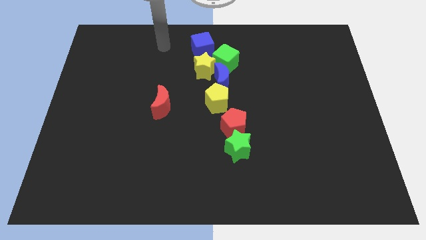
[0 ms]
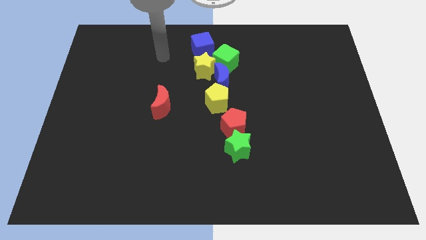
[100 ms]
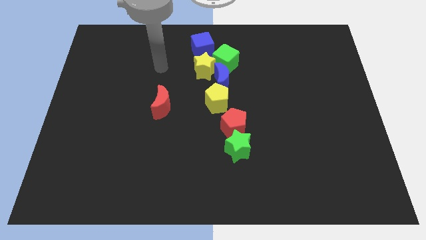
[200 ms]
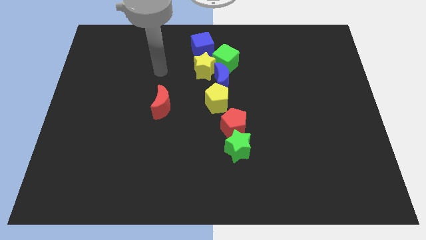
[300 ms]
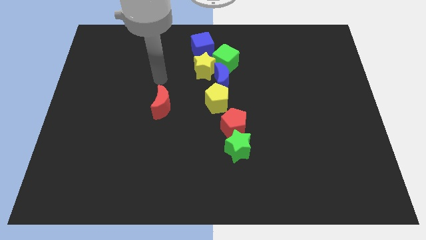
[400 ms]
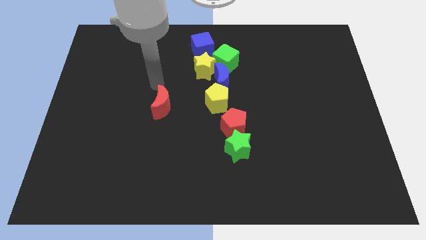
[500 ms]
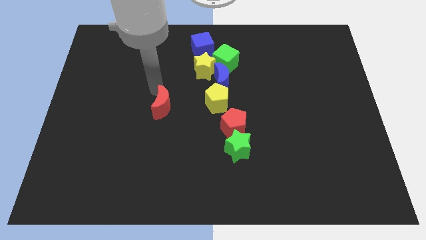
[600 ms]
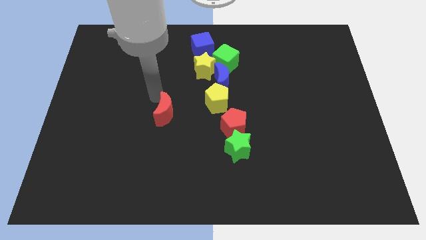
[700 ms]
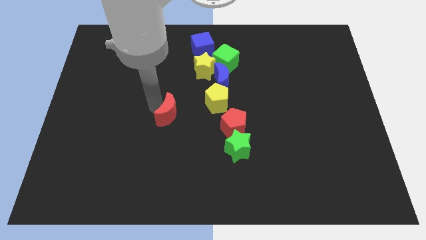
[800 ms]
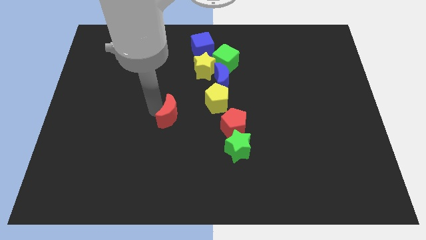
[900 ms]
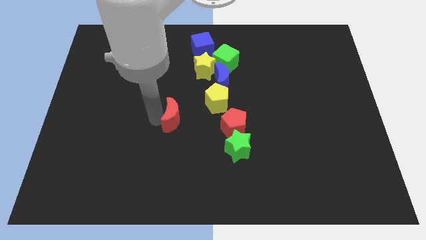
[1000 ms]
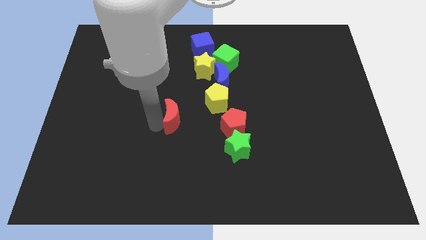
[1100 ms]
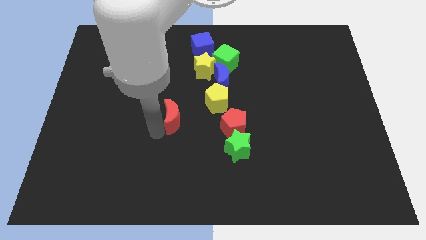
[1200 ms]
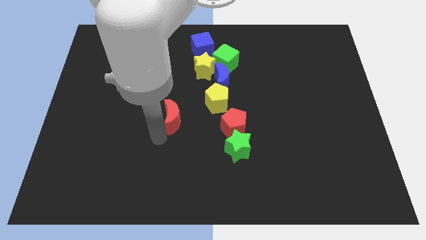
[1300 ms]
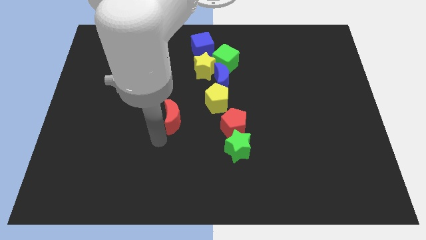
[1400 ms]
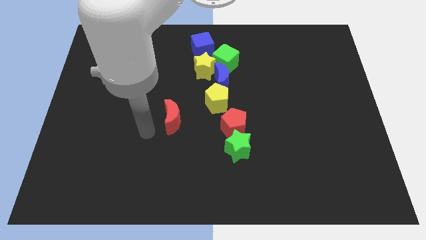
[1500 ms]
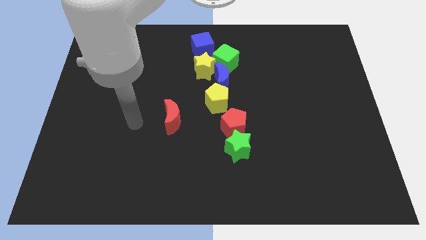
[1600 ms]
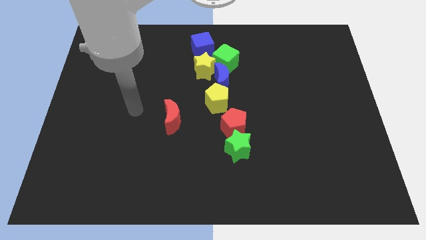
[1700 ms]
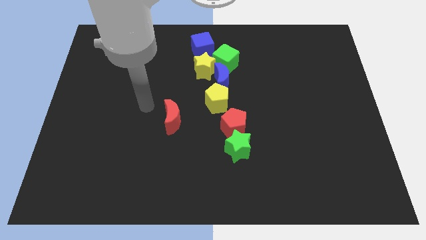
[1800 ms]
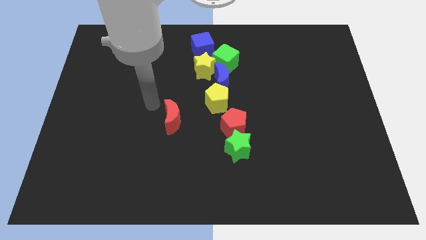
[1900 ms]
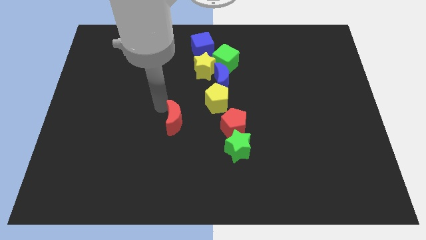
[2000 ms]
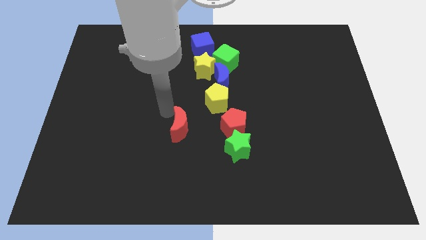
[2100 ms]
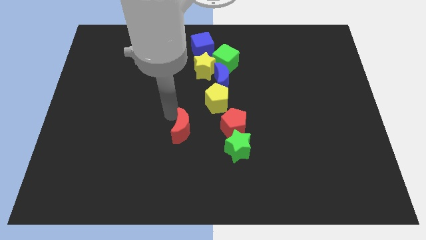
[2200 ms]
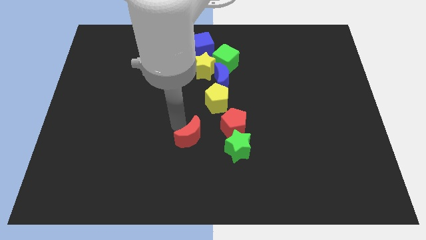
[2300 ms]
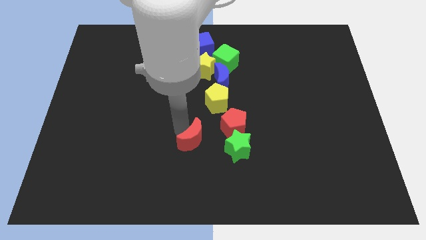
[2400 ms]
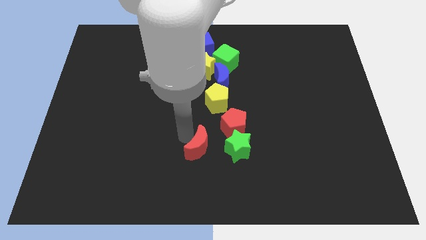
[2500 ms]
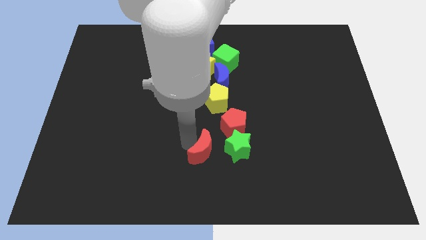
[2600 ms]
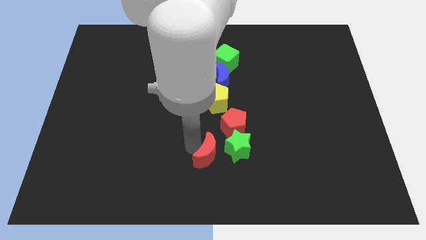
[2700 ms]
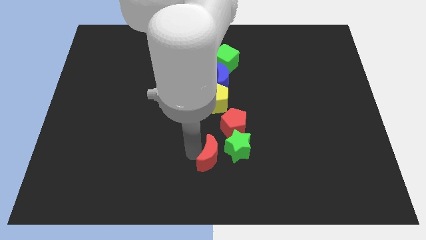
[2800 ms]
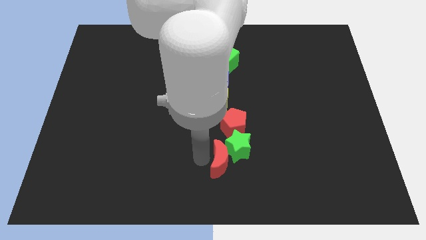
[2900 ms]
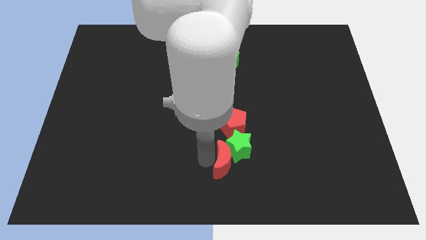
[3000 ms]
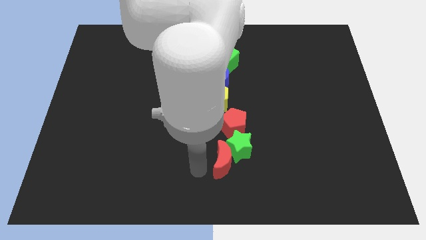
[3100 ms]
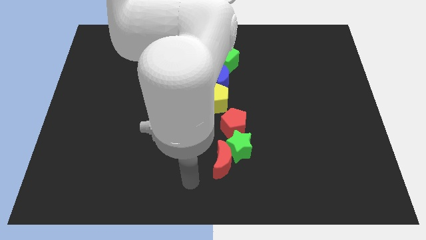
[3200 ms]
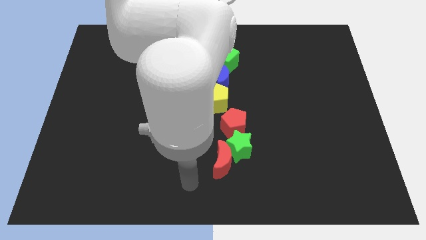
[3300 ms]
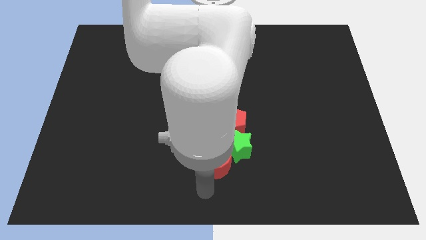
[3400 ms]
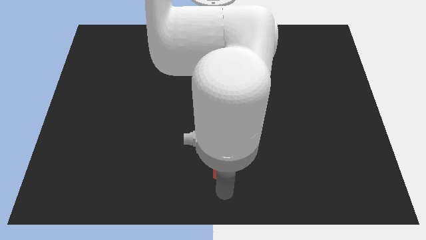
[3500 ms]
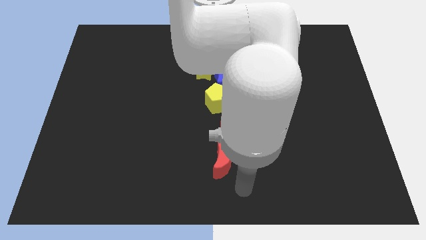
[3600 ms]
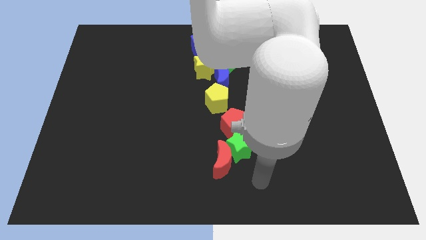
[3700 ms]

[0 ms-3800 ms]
move the red moon into the green star

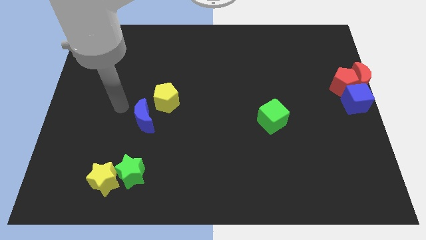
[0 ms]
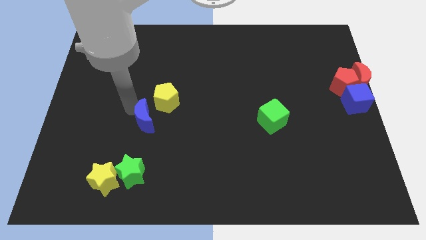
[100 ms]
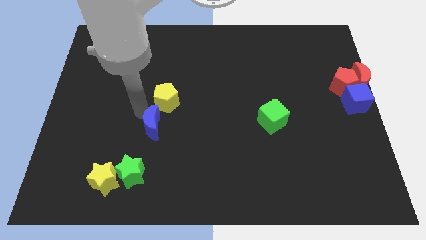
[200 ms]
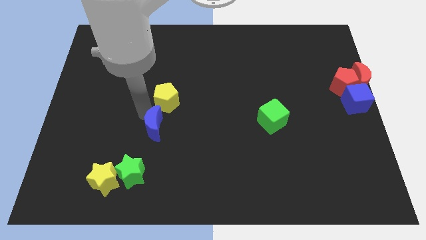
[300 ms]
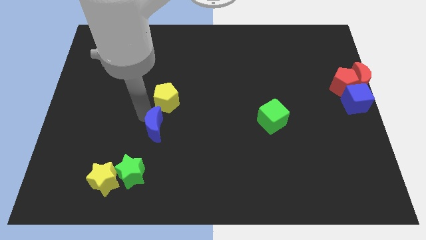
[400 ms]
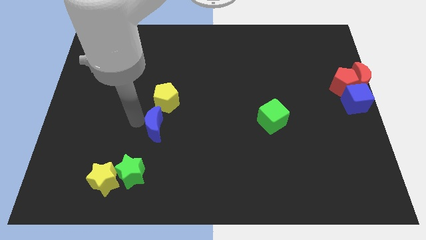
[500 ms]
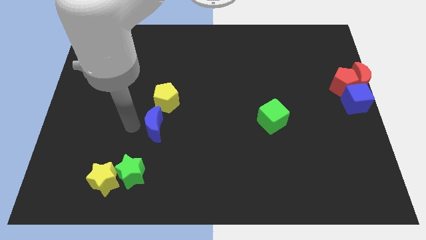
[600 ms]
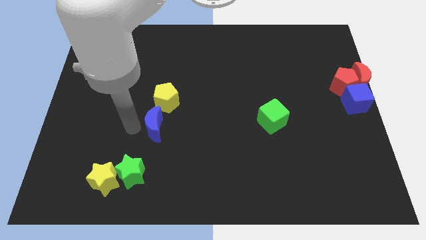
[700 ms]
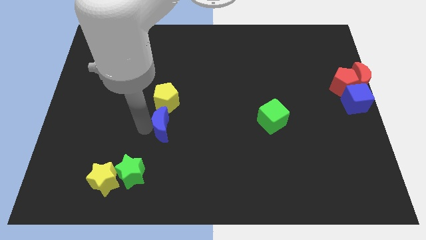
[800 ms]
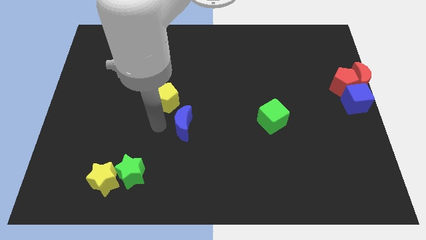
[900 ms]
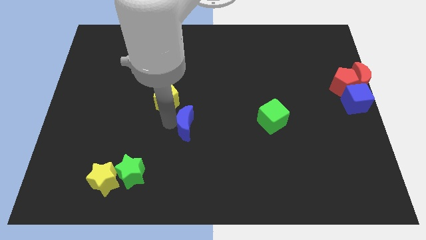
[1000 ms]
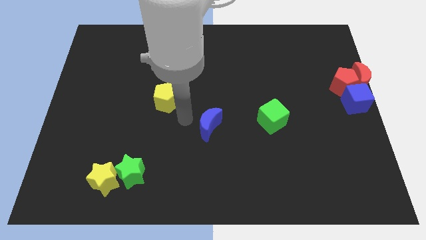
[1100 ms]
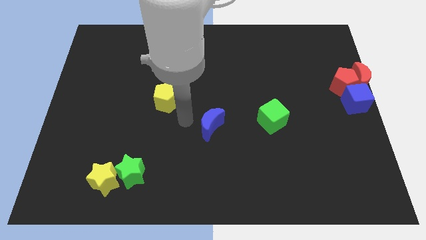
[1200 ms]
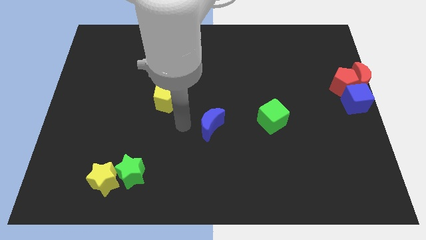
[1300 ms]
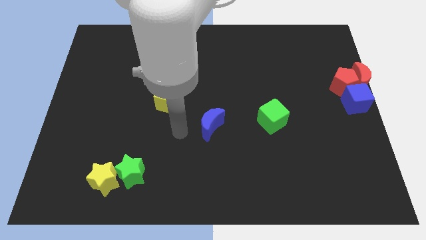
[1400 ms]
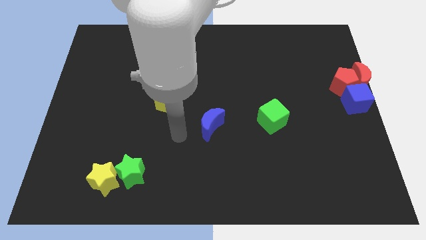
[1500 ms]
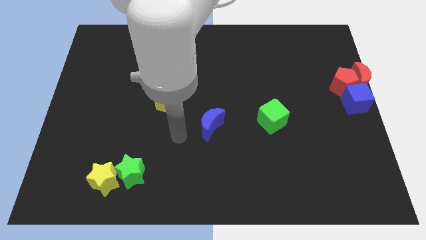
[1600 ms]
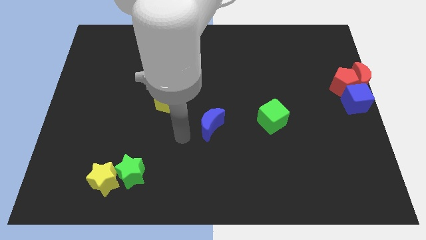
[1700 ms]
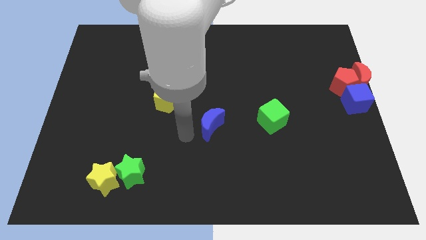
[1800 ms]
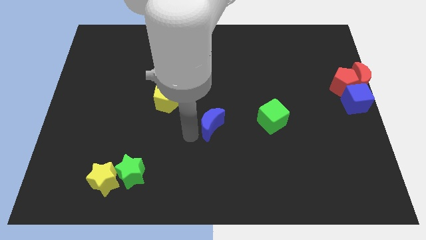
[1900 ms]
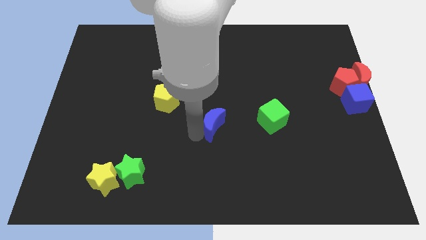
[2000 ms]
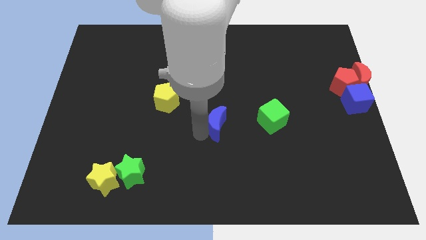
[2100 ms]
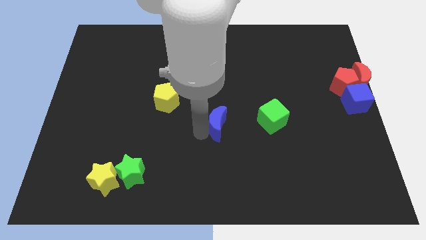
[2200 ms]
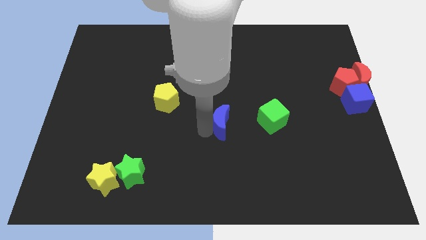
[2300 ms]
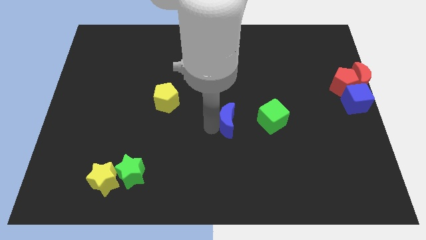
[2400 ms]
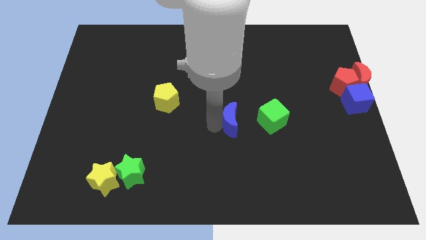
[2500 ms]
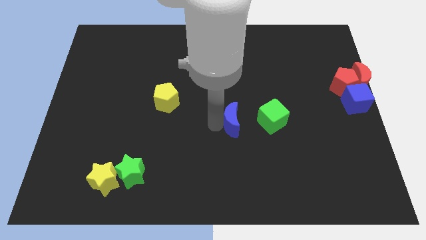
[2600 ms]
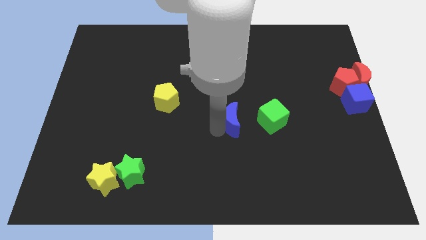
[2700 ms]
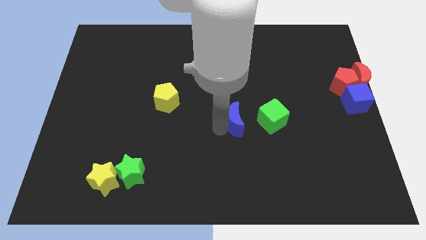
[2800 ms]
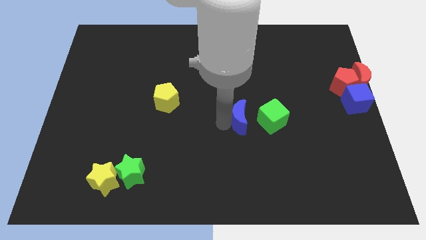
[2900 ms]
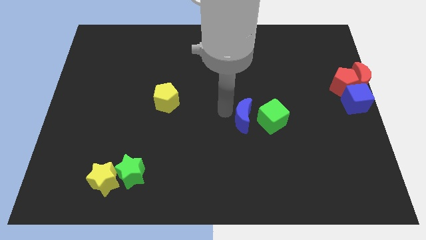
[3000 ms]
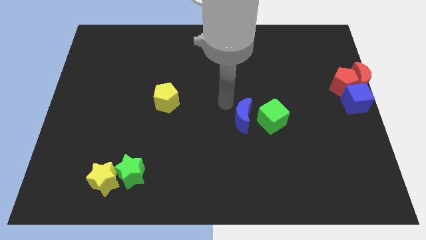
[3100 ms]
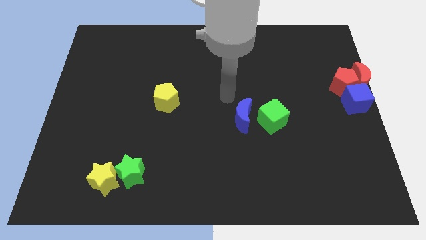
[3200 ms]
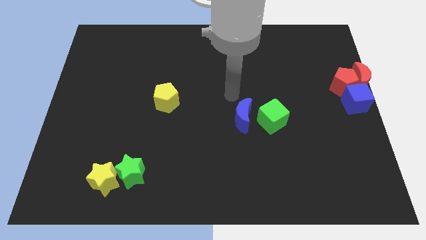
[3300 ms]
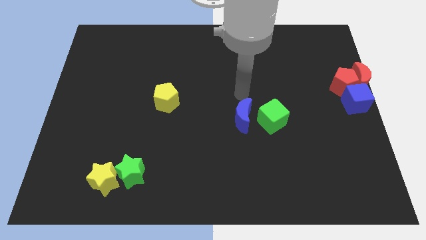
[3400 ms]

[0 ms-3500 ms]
move the blue moon to the center

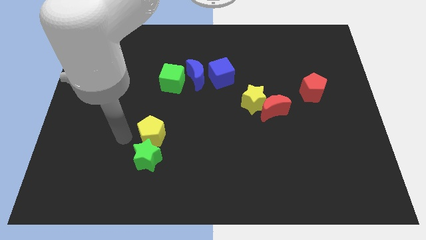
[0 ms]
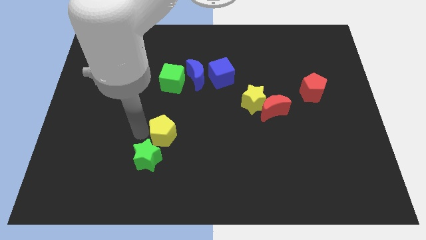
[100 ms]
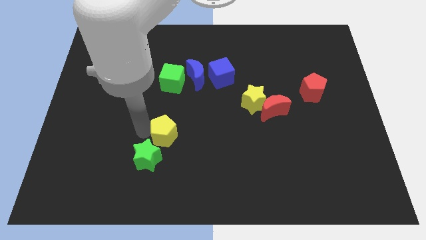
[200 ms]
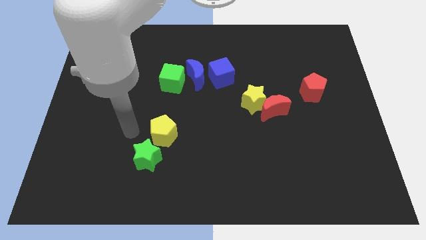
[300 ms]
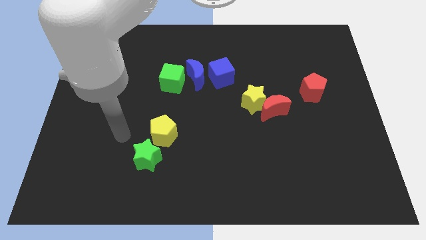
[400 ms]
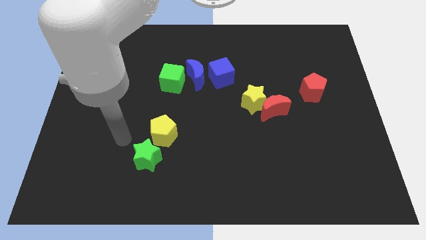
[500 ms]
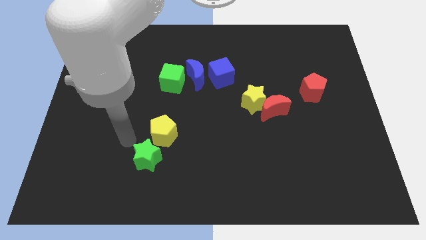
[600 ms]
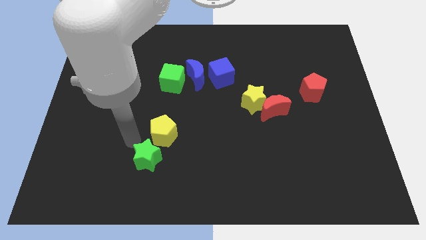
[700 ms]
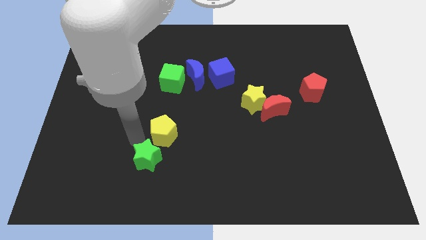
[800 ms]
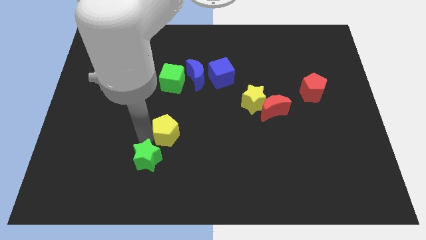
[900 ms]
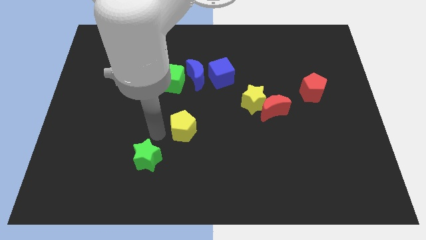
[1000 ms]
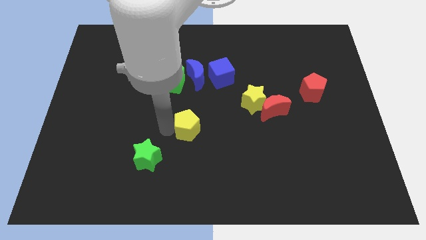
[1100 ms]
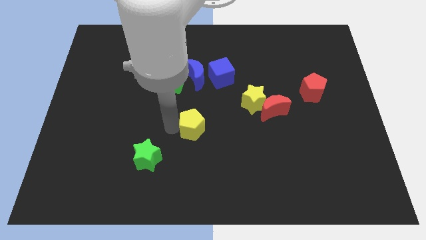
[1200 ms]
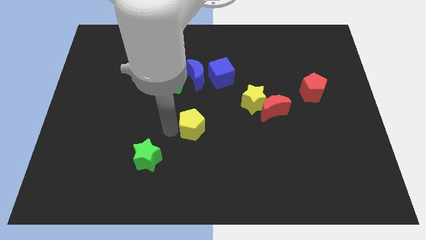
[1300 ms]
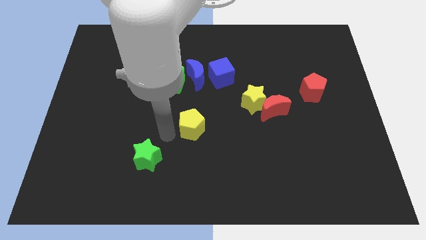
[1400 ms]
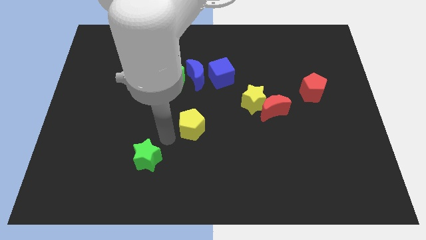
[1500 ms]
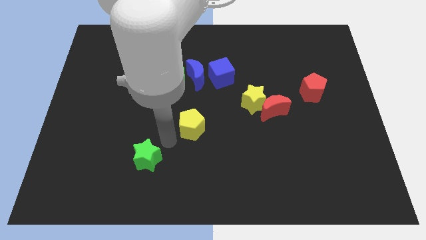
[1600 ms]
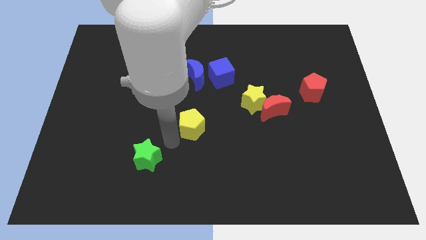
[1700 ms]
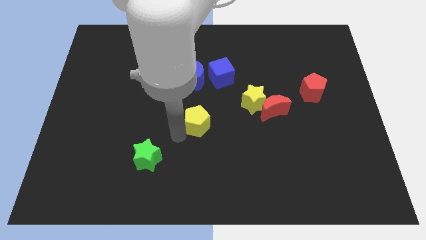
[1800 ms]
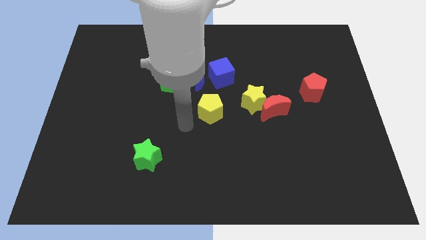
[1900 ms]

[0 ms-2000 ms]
slide the yellow pentagon to the bottom side of the blue moon
